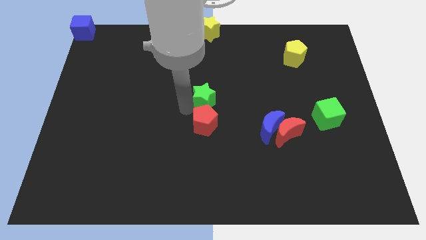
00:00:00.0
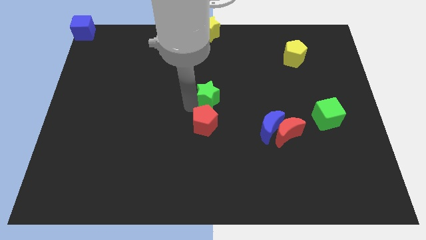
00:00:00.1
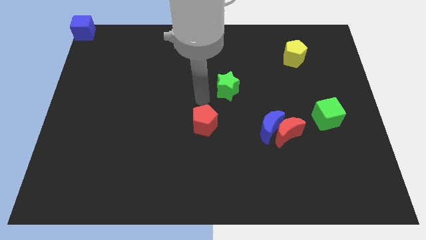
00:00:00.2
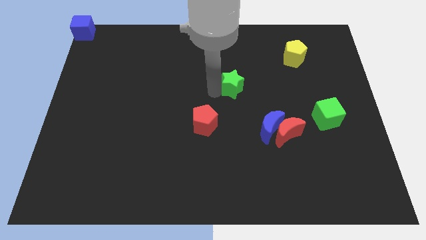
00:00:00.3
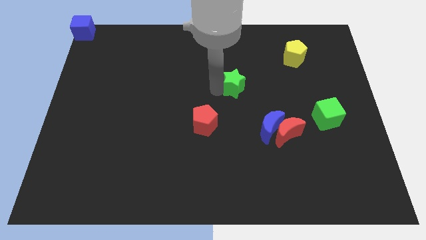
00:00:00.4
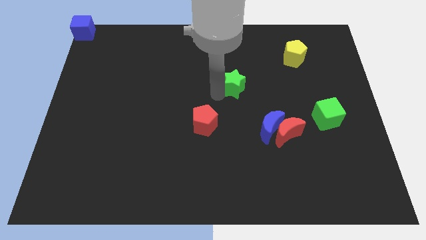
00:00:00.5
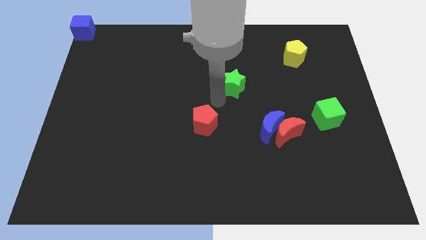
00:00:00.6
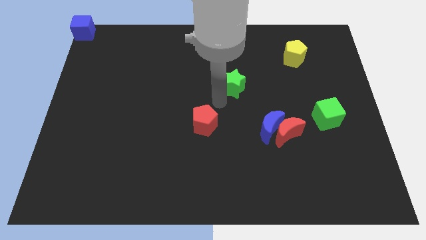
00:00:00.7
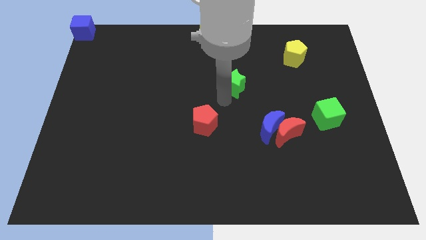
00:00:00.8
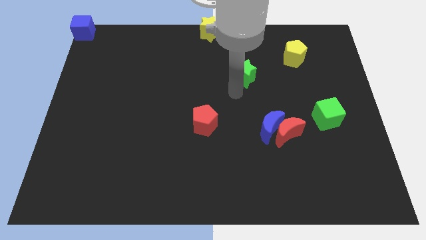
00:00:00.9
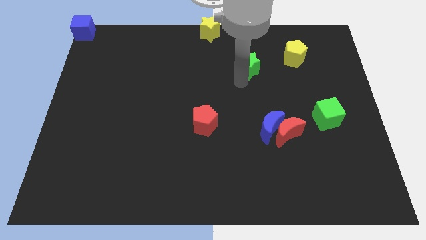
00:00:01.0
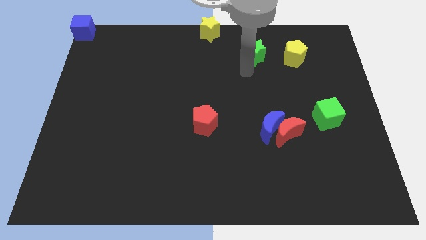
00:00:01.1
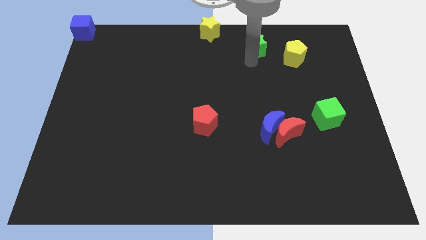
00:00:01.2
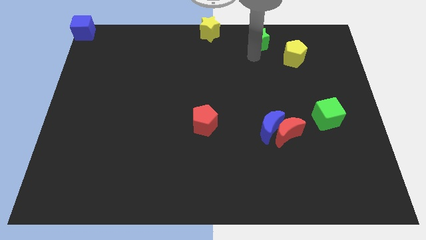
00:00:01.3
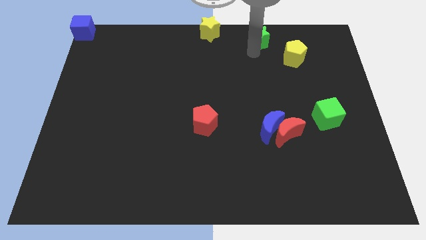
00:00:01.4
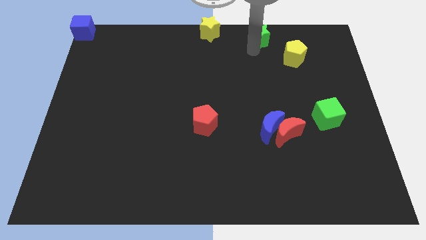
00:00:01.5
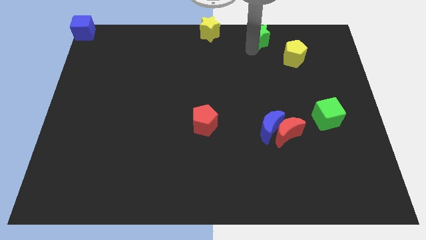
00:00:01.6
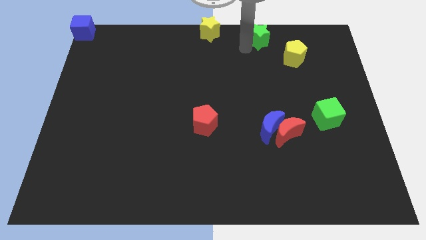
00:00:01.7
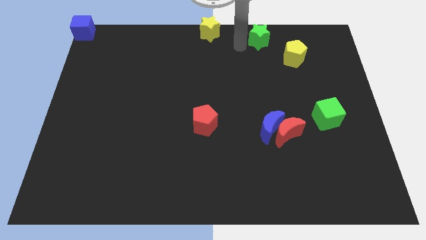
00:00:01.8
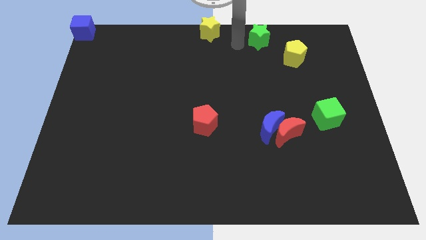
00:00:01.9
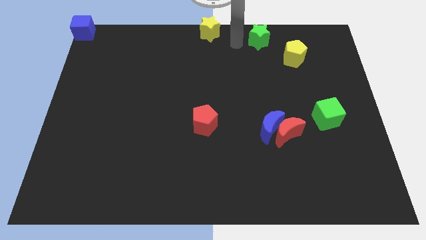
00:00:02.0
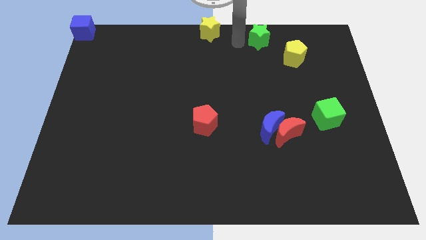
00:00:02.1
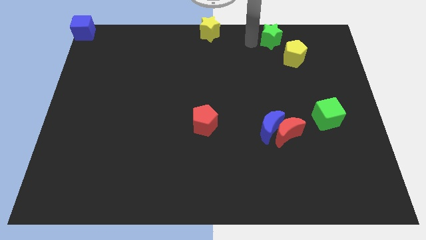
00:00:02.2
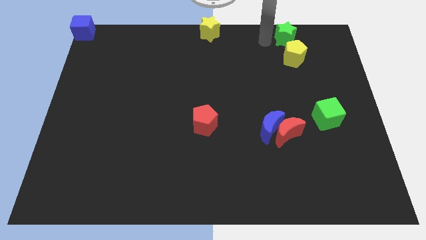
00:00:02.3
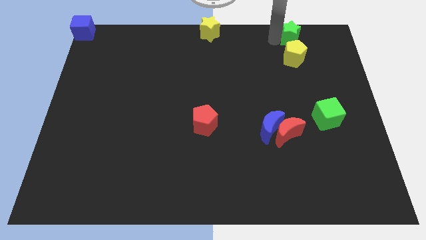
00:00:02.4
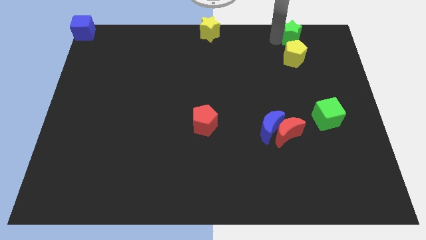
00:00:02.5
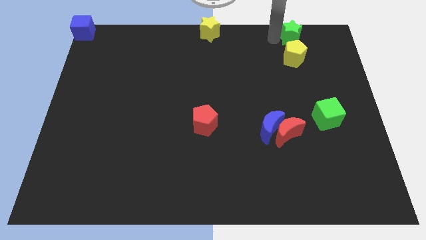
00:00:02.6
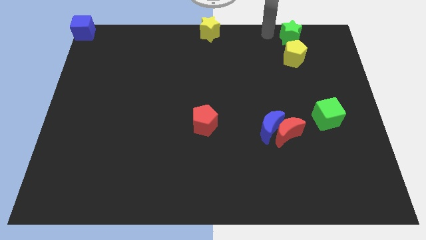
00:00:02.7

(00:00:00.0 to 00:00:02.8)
move green star above yellow pentagon

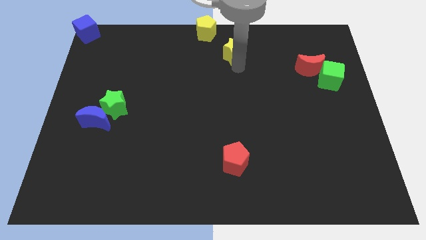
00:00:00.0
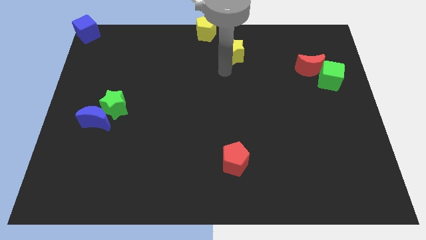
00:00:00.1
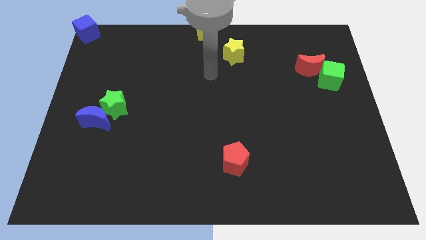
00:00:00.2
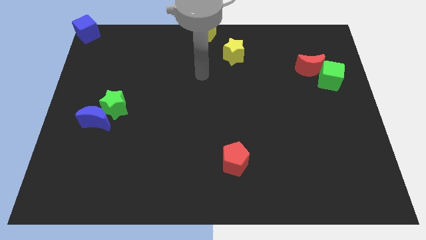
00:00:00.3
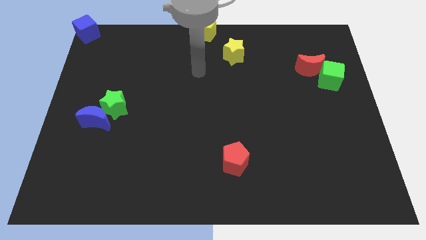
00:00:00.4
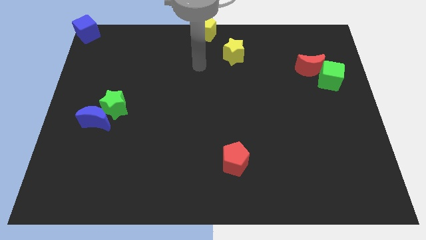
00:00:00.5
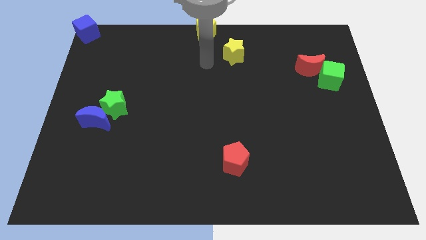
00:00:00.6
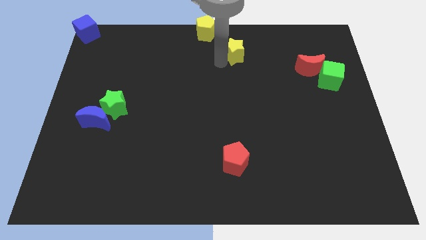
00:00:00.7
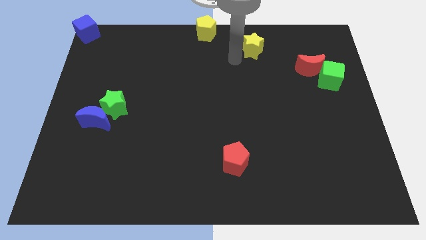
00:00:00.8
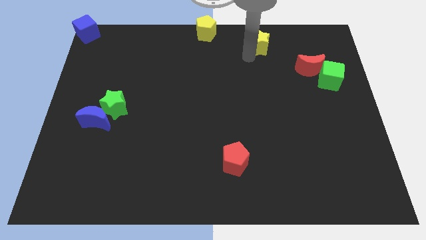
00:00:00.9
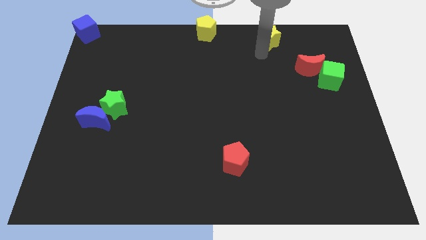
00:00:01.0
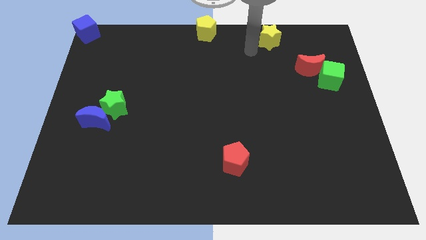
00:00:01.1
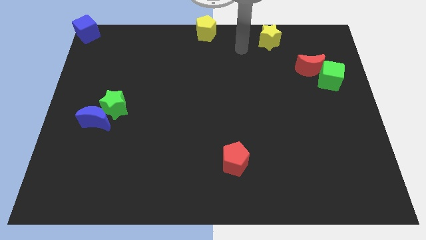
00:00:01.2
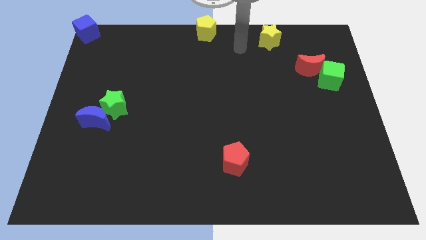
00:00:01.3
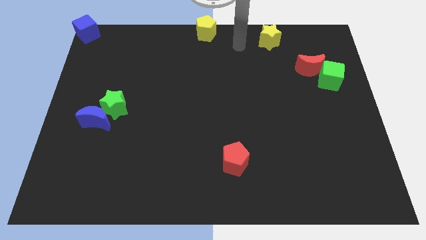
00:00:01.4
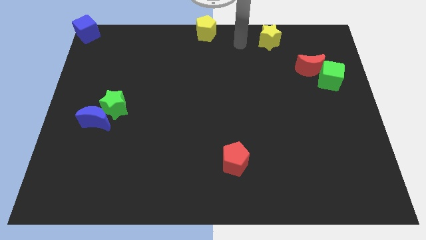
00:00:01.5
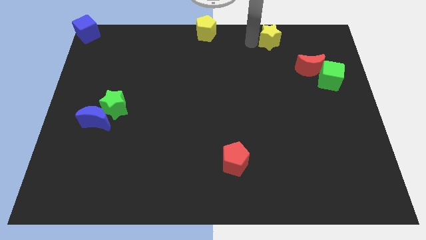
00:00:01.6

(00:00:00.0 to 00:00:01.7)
place the yellow star right to the yellow pentagon

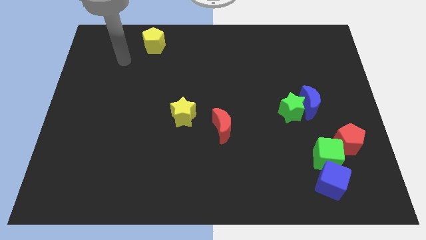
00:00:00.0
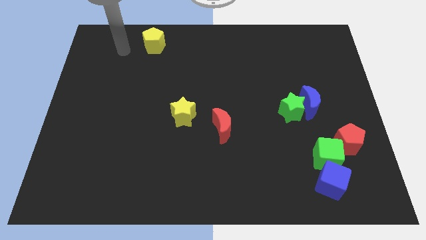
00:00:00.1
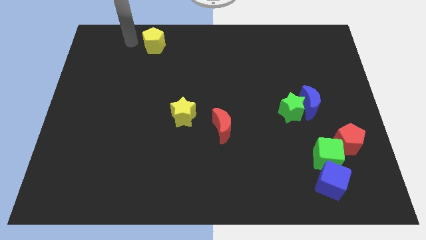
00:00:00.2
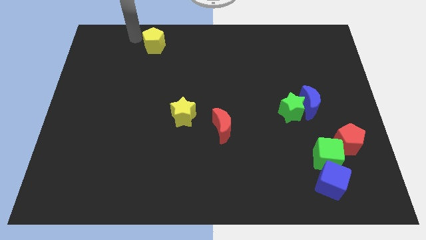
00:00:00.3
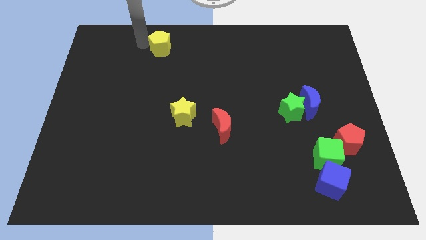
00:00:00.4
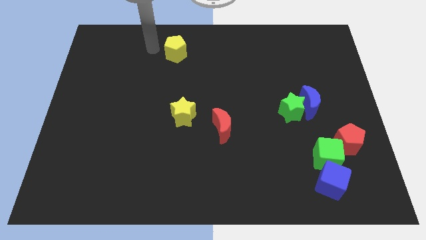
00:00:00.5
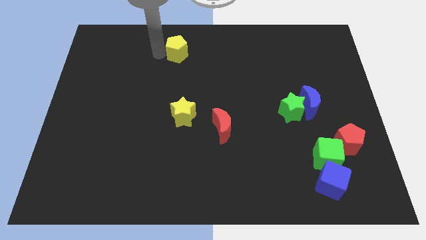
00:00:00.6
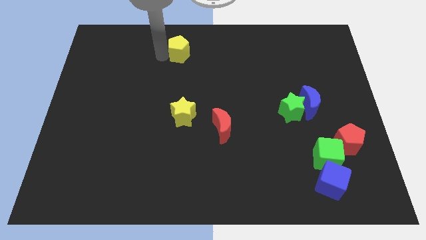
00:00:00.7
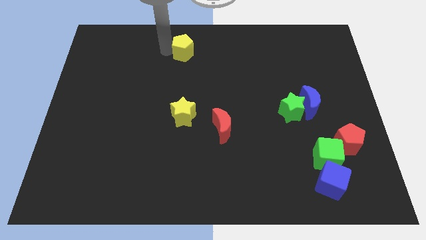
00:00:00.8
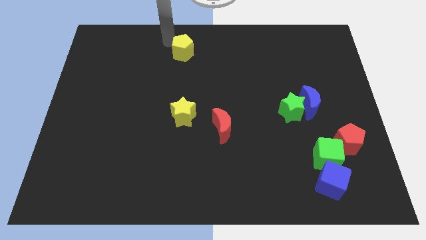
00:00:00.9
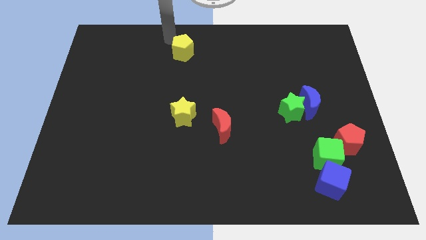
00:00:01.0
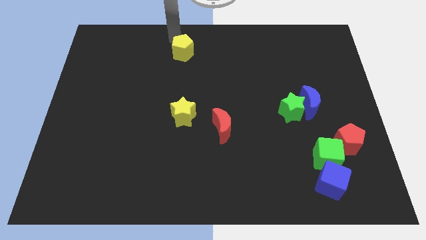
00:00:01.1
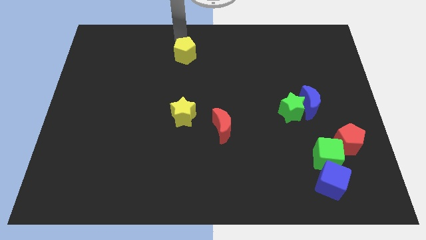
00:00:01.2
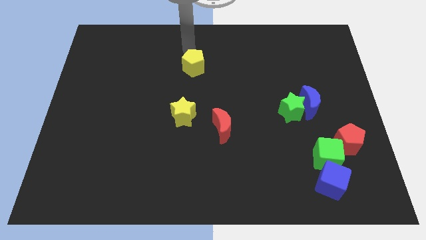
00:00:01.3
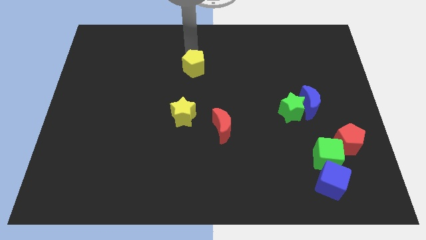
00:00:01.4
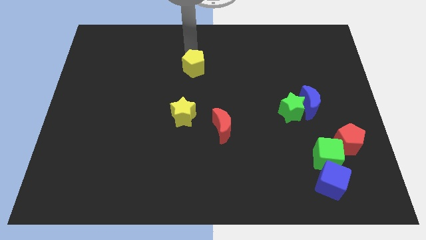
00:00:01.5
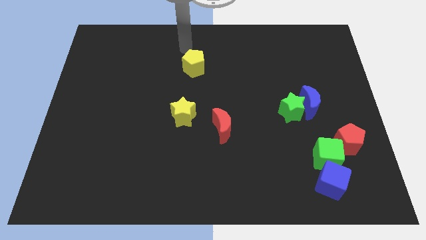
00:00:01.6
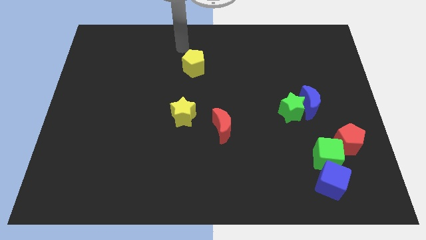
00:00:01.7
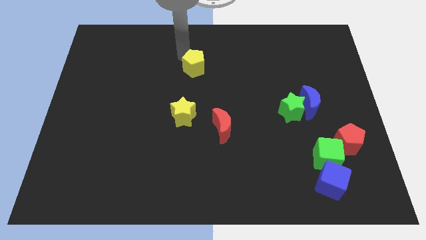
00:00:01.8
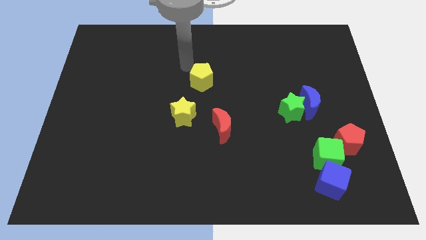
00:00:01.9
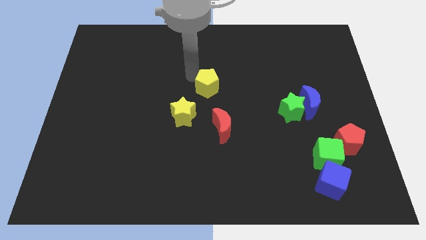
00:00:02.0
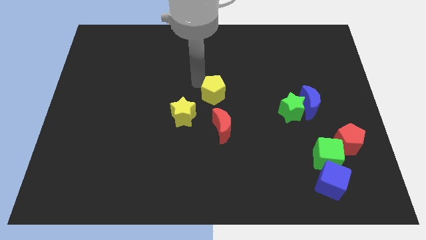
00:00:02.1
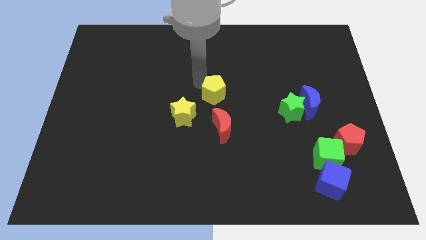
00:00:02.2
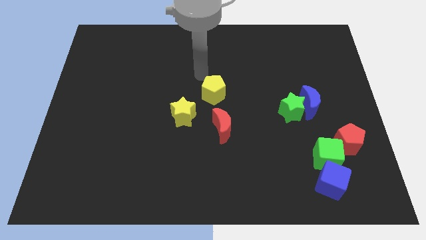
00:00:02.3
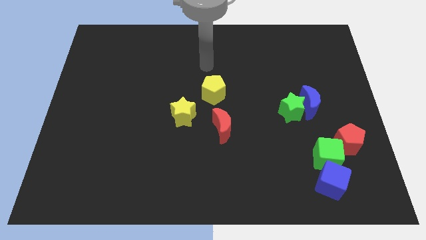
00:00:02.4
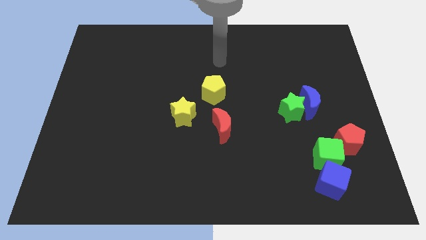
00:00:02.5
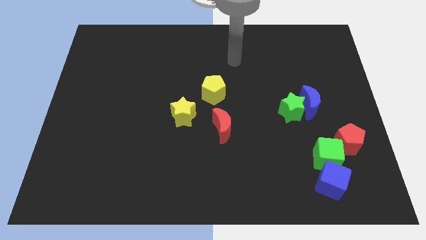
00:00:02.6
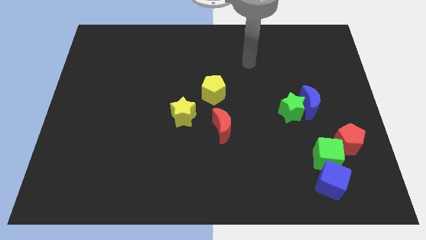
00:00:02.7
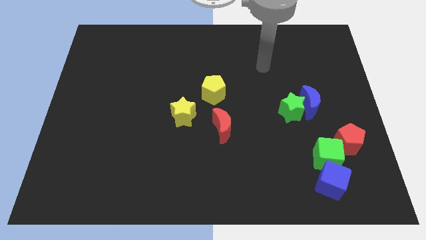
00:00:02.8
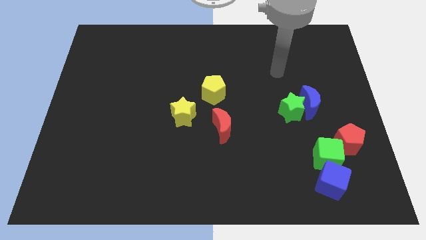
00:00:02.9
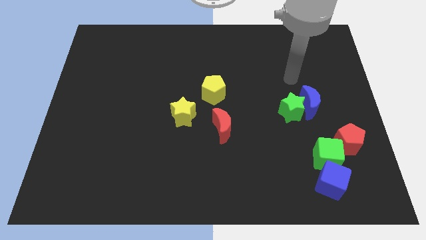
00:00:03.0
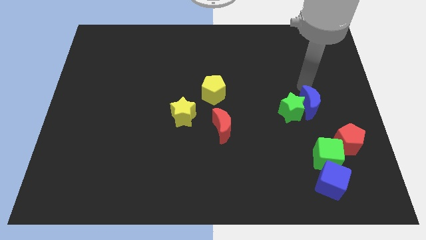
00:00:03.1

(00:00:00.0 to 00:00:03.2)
move yellow pentagon to the top of red crescent

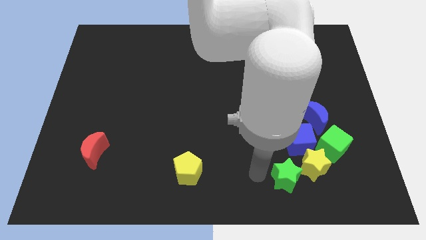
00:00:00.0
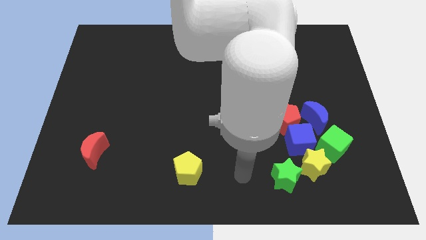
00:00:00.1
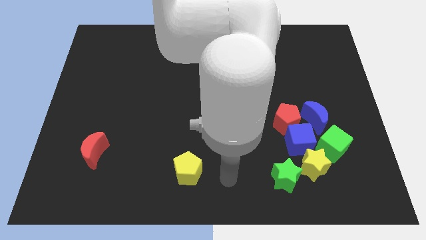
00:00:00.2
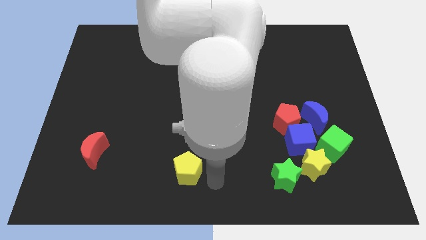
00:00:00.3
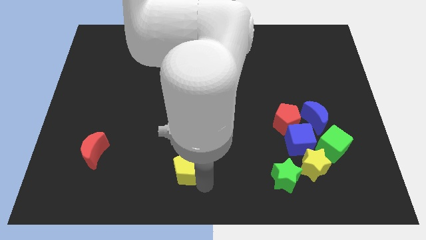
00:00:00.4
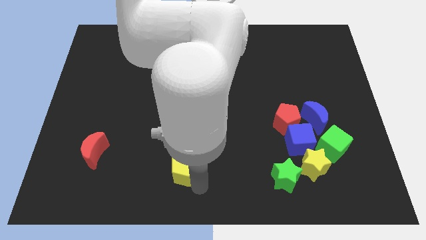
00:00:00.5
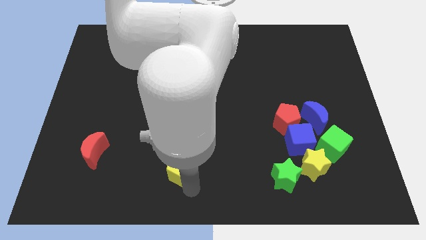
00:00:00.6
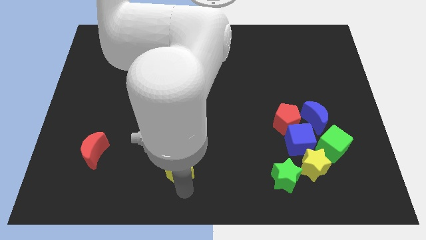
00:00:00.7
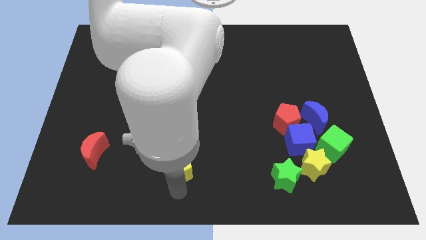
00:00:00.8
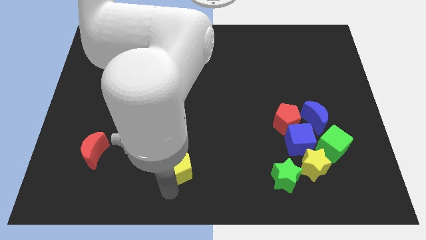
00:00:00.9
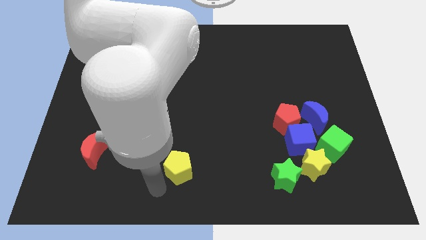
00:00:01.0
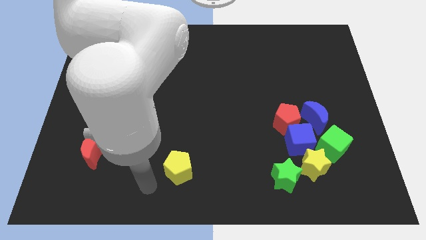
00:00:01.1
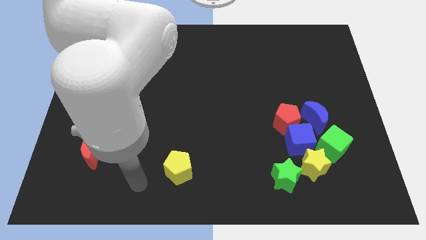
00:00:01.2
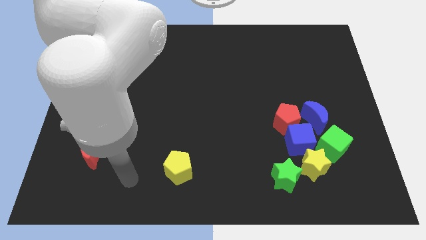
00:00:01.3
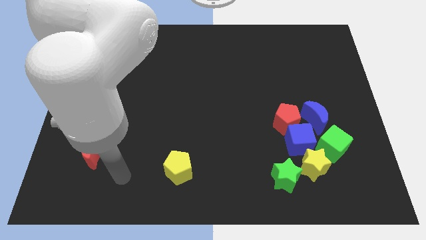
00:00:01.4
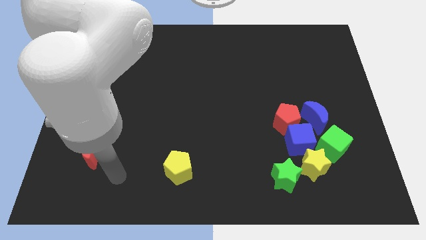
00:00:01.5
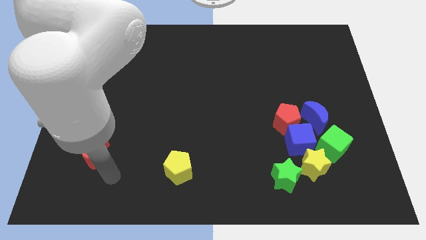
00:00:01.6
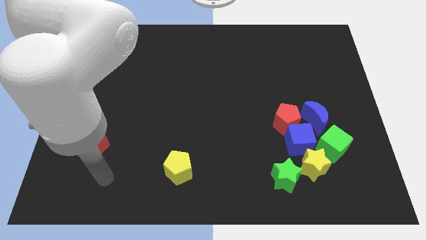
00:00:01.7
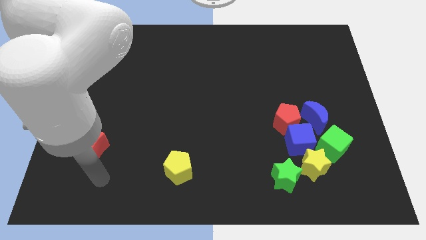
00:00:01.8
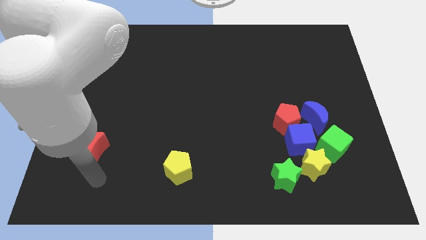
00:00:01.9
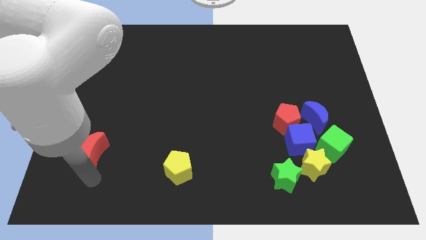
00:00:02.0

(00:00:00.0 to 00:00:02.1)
push the yellow pentagon slightly towards the left side
